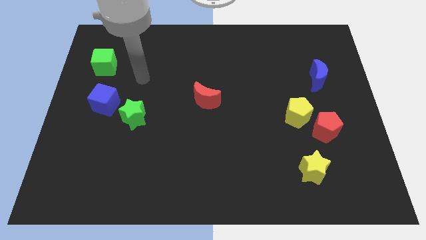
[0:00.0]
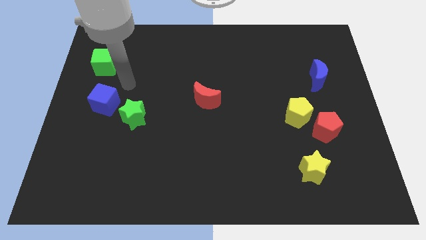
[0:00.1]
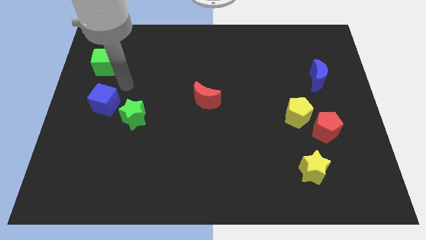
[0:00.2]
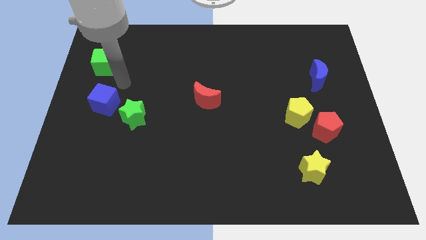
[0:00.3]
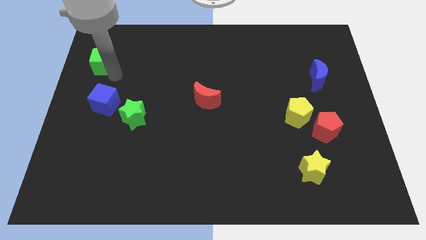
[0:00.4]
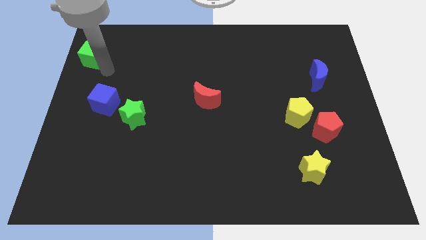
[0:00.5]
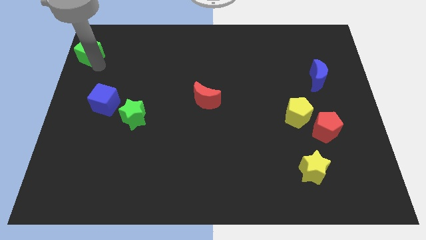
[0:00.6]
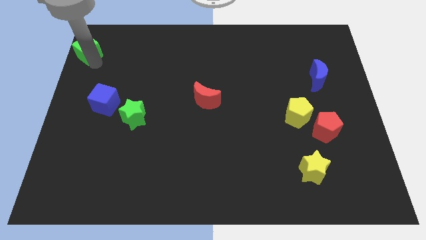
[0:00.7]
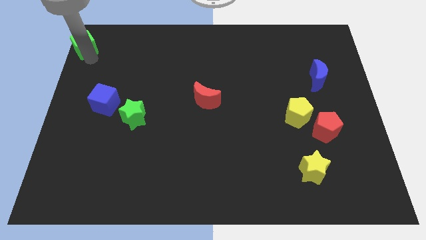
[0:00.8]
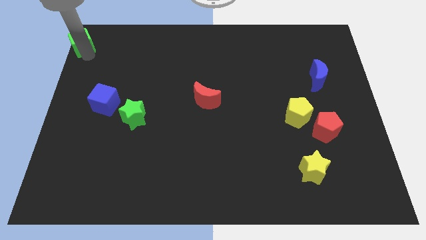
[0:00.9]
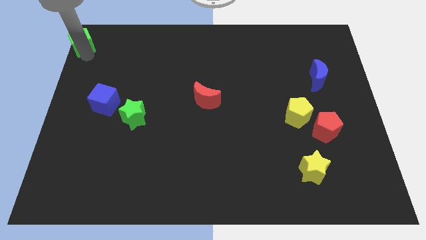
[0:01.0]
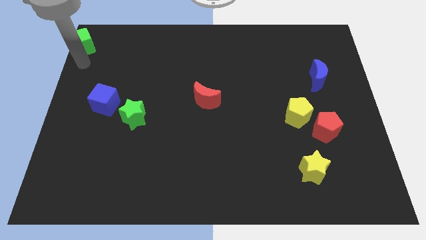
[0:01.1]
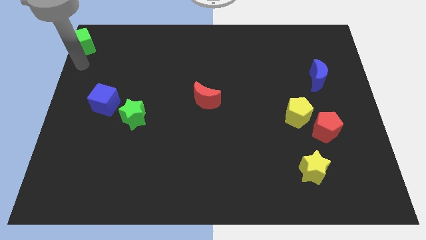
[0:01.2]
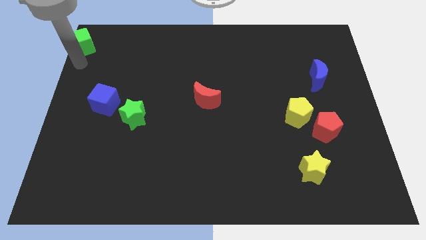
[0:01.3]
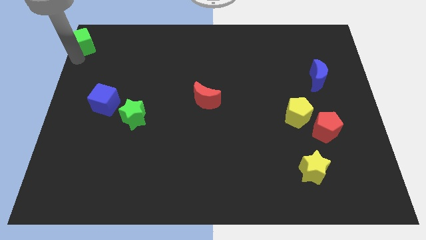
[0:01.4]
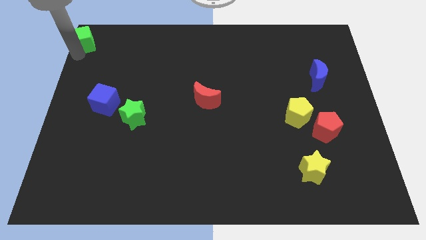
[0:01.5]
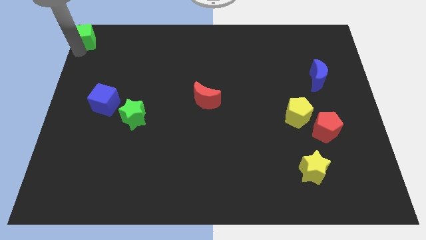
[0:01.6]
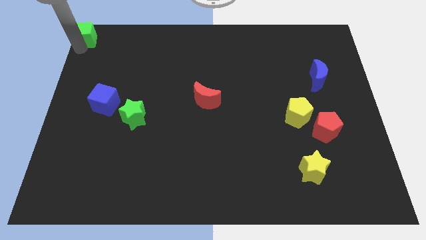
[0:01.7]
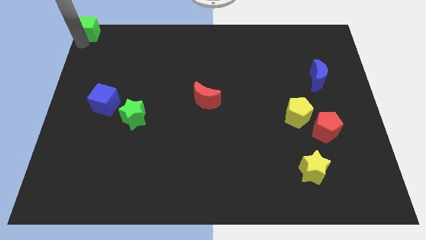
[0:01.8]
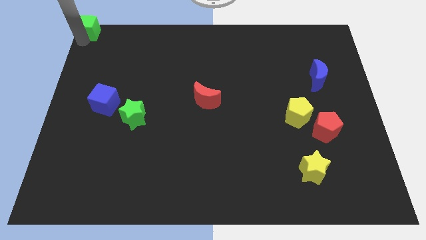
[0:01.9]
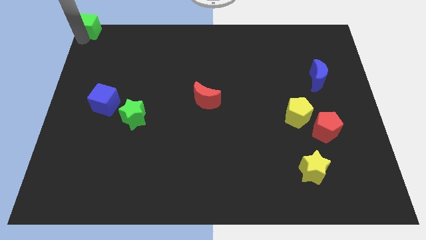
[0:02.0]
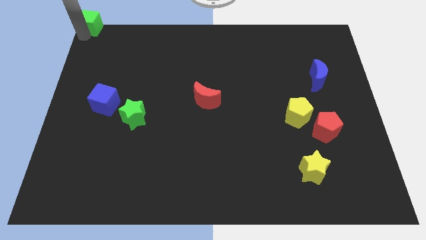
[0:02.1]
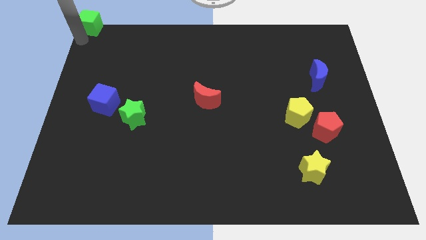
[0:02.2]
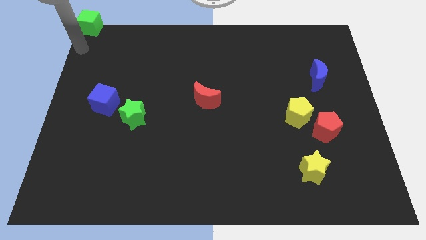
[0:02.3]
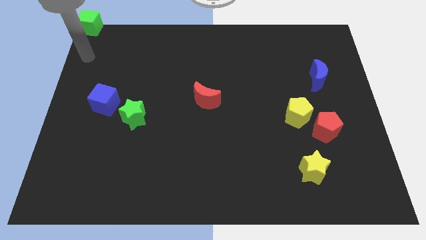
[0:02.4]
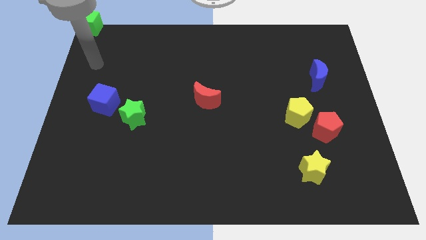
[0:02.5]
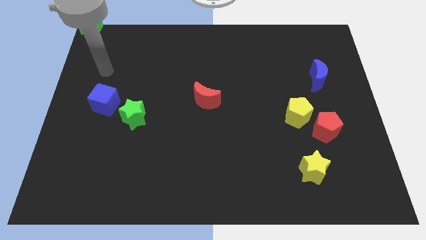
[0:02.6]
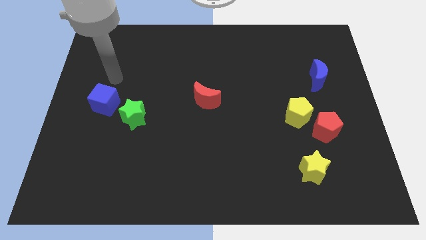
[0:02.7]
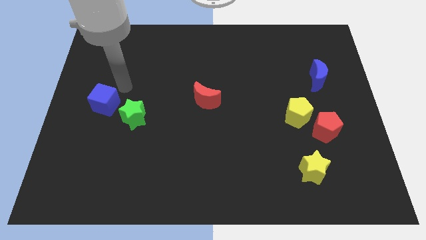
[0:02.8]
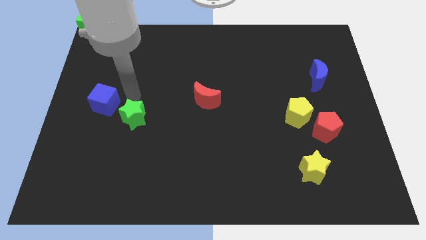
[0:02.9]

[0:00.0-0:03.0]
push the green cube to the top left

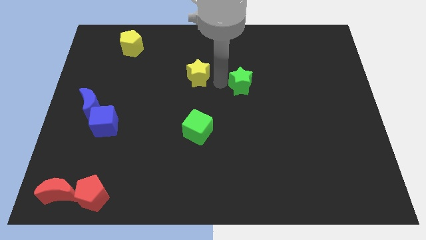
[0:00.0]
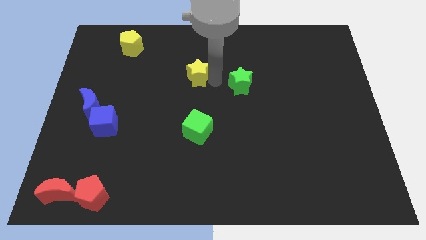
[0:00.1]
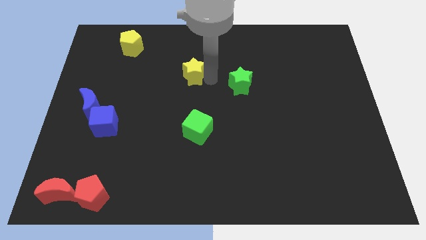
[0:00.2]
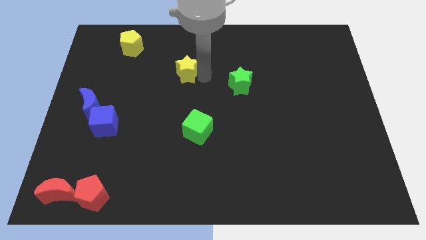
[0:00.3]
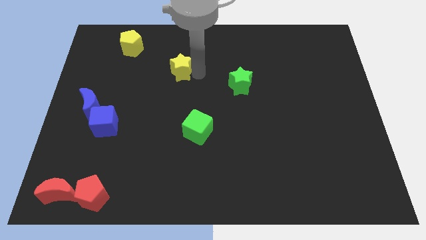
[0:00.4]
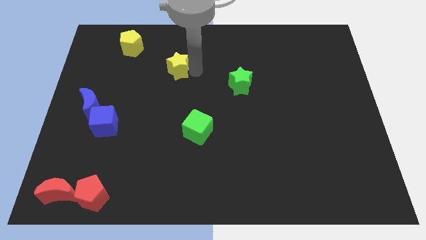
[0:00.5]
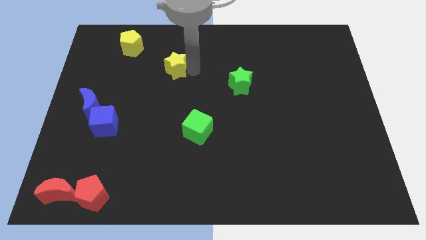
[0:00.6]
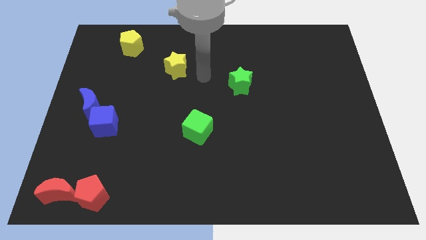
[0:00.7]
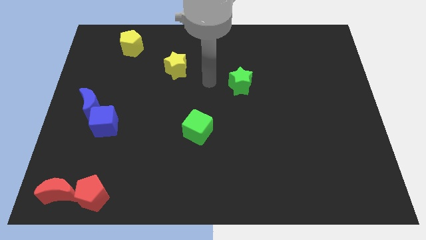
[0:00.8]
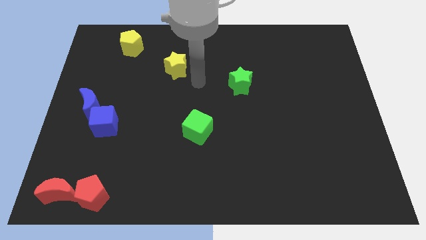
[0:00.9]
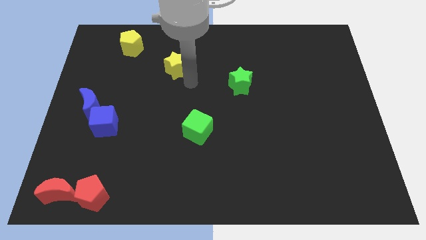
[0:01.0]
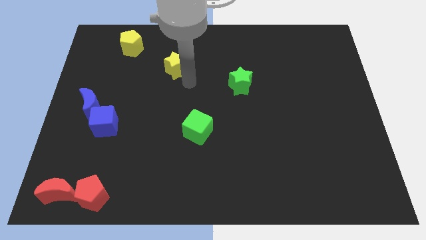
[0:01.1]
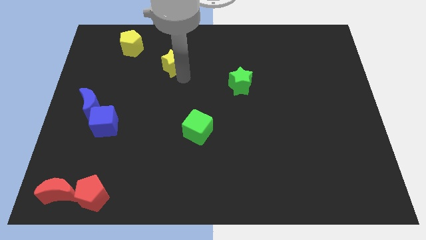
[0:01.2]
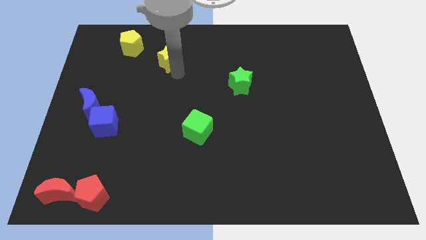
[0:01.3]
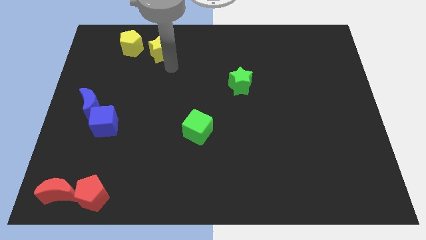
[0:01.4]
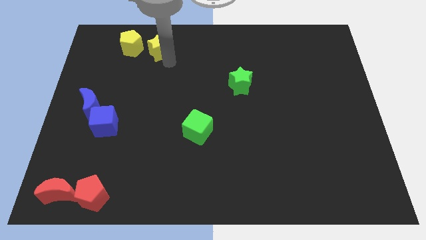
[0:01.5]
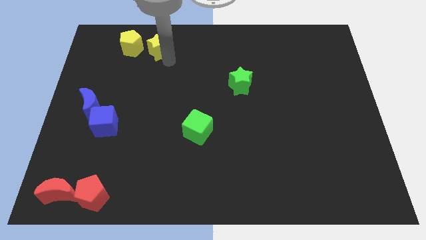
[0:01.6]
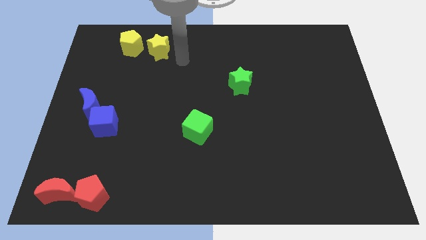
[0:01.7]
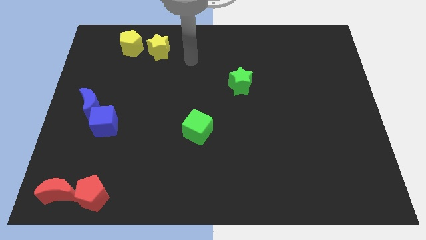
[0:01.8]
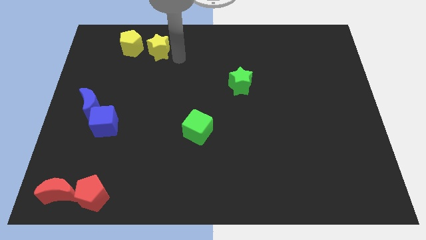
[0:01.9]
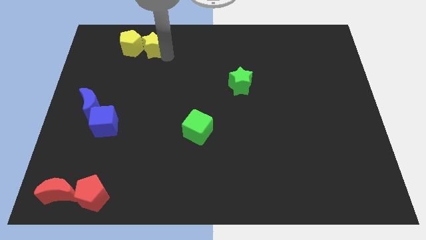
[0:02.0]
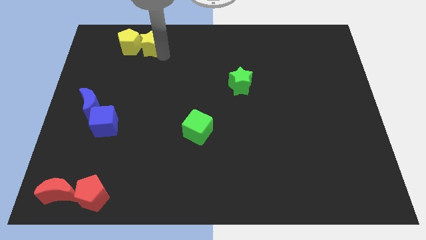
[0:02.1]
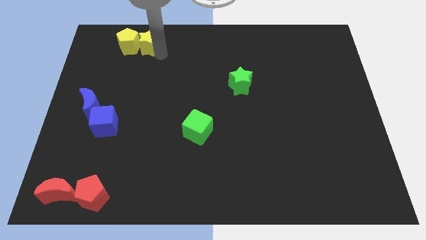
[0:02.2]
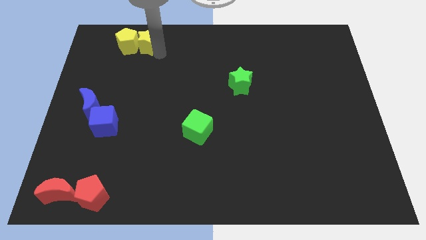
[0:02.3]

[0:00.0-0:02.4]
drag yellow star beside yellow pentagon

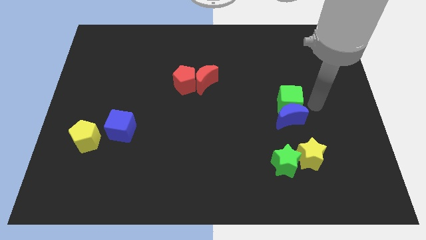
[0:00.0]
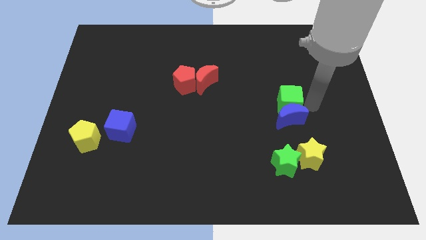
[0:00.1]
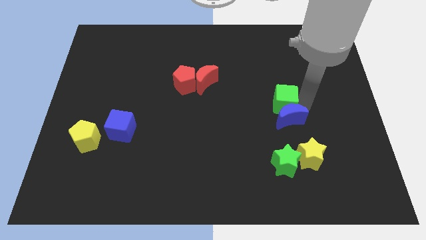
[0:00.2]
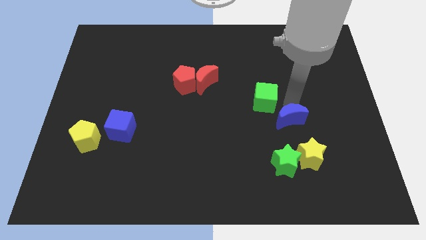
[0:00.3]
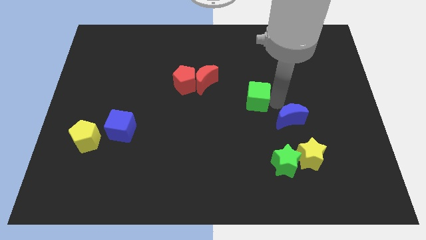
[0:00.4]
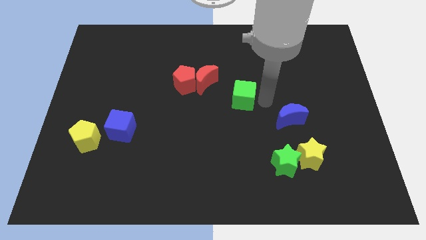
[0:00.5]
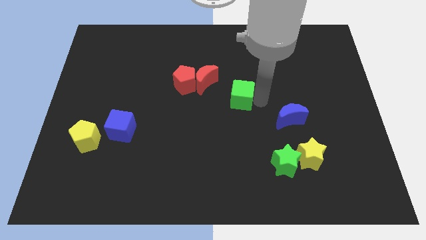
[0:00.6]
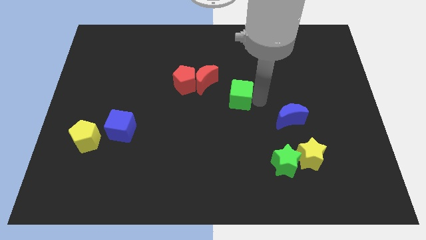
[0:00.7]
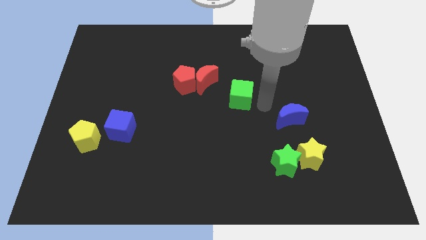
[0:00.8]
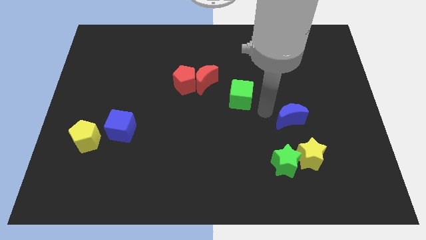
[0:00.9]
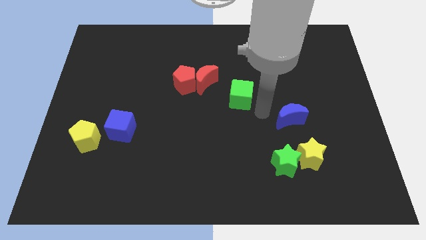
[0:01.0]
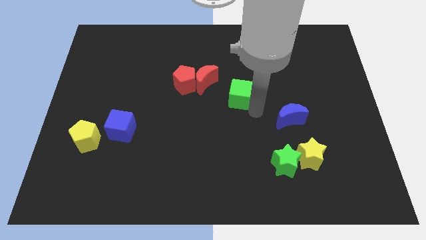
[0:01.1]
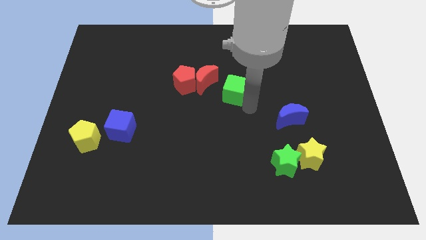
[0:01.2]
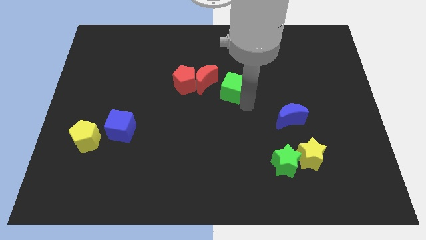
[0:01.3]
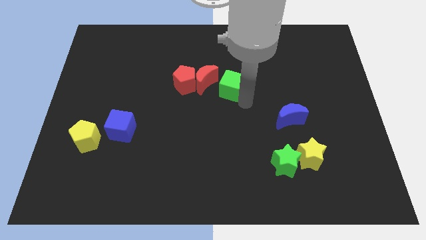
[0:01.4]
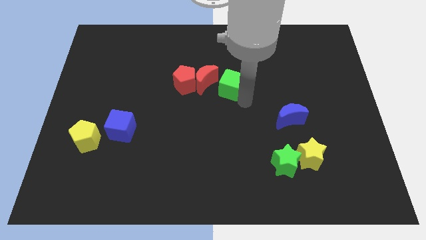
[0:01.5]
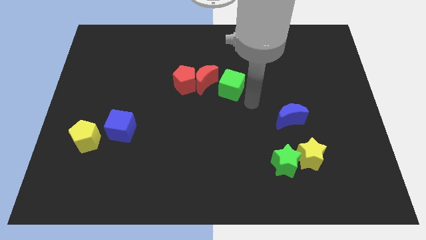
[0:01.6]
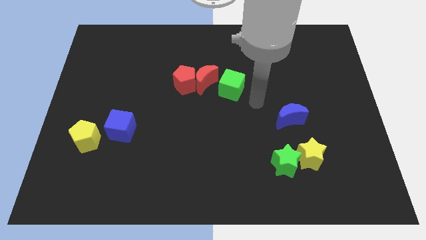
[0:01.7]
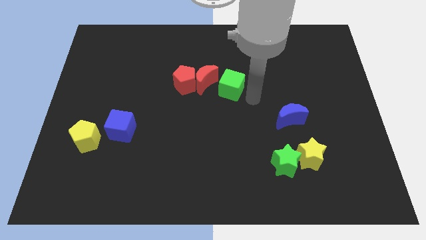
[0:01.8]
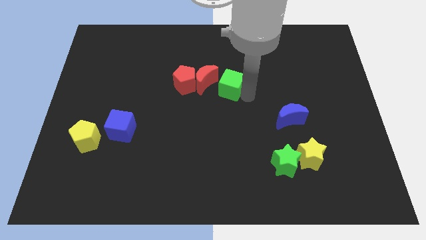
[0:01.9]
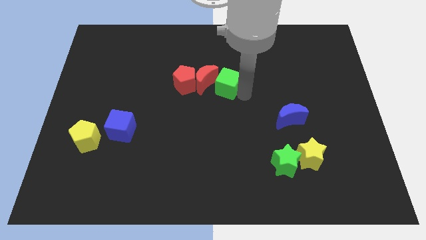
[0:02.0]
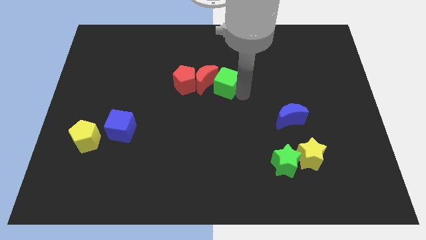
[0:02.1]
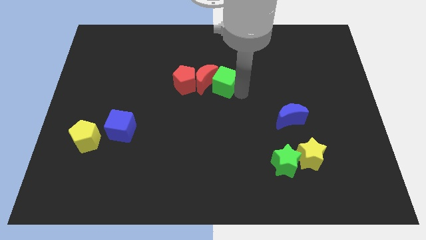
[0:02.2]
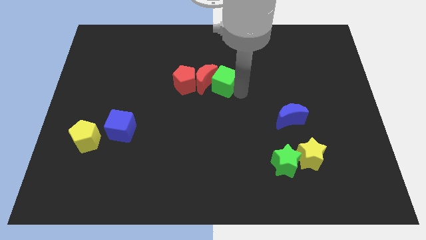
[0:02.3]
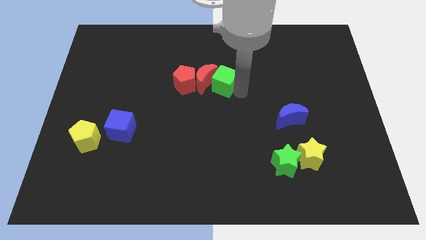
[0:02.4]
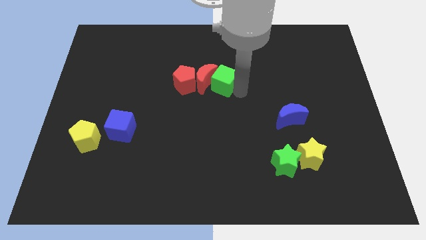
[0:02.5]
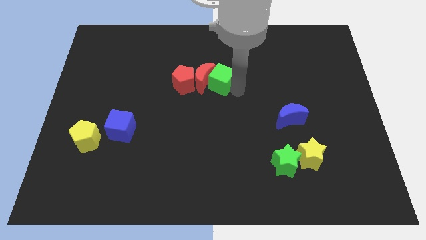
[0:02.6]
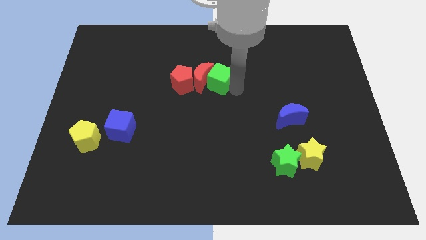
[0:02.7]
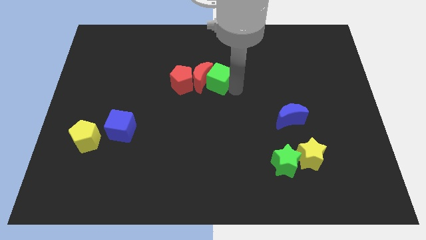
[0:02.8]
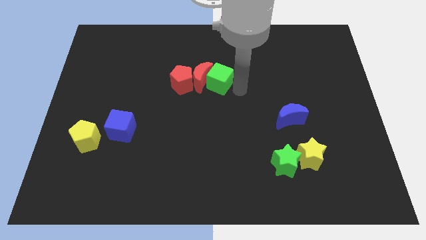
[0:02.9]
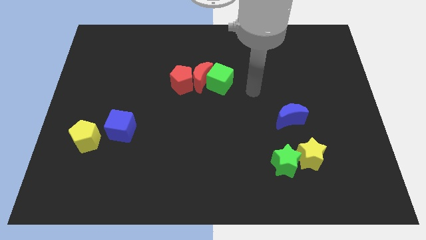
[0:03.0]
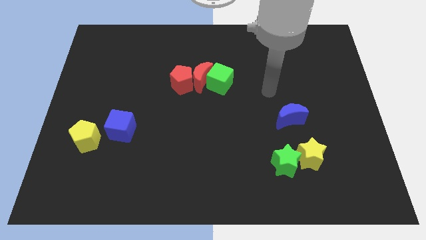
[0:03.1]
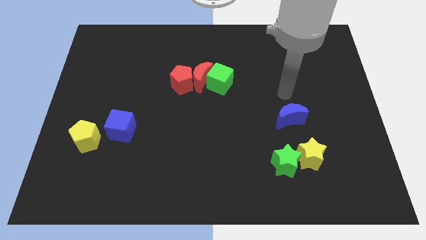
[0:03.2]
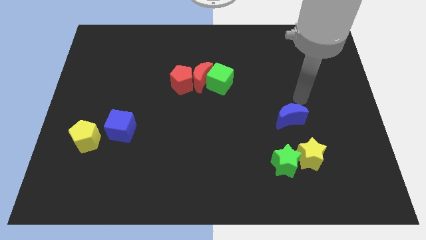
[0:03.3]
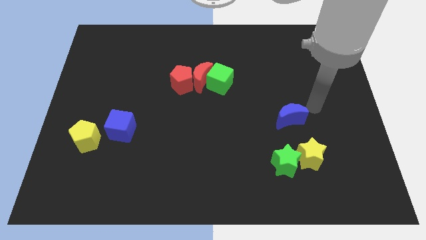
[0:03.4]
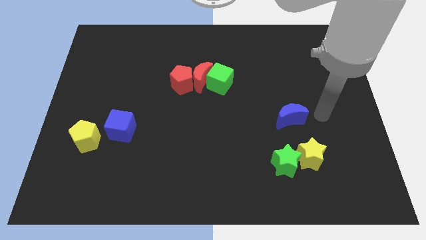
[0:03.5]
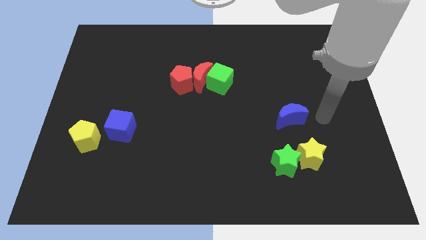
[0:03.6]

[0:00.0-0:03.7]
push green cube in to red moon
